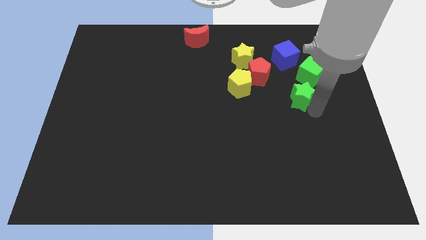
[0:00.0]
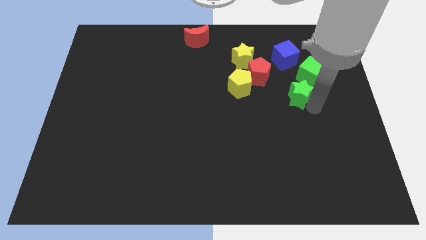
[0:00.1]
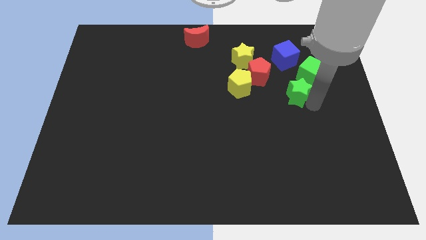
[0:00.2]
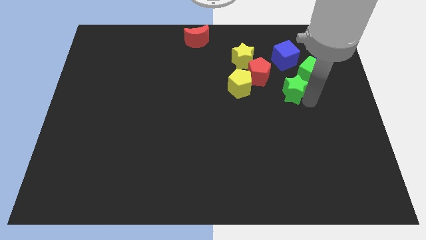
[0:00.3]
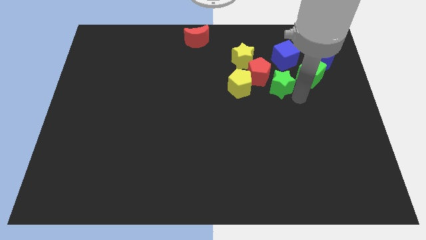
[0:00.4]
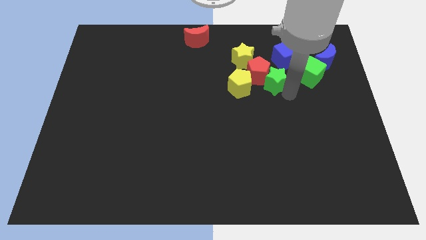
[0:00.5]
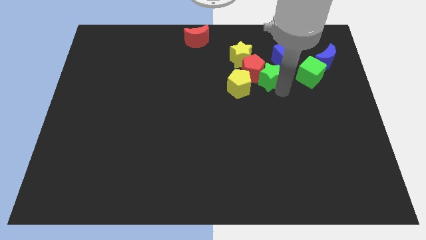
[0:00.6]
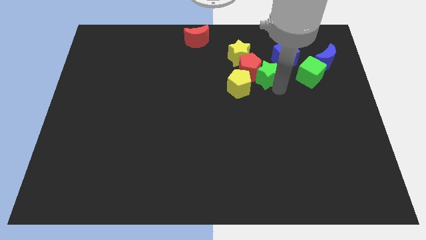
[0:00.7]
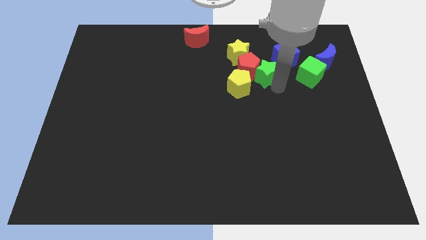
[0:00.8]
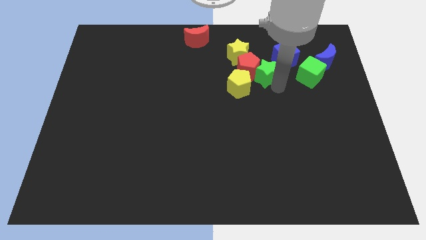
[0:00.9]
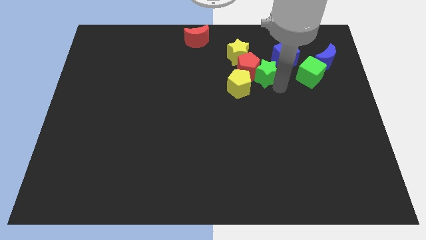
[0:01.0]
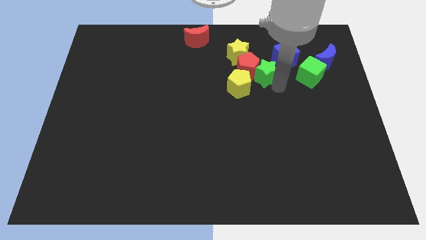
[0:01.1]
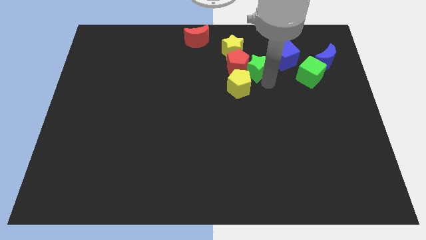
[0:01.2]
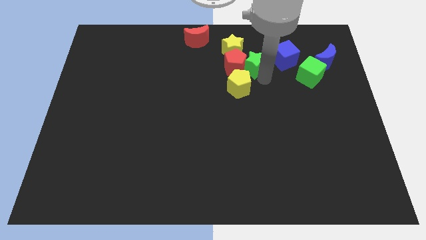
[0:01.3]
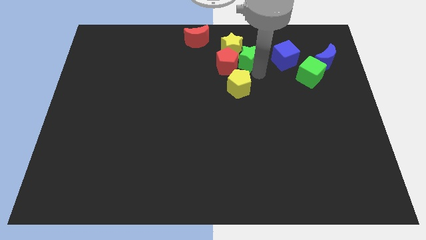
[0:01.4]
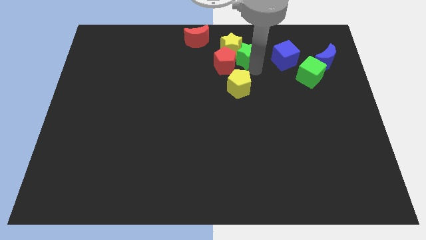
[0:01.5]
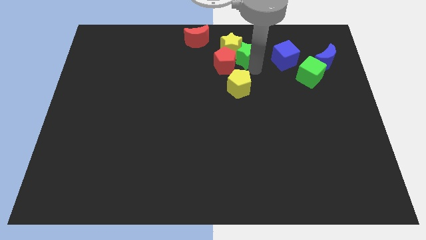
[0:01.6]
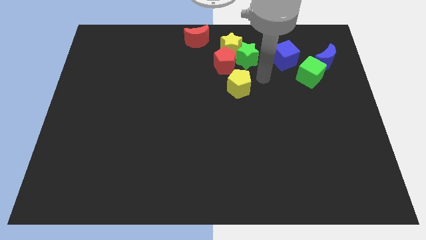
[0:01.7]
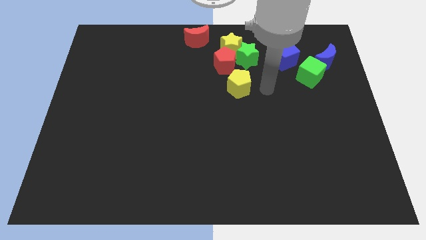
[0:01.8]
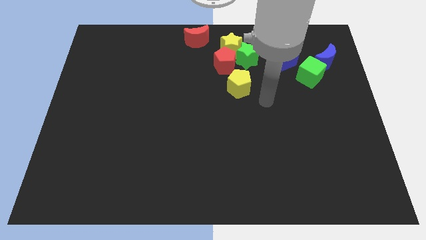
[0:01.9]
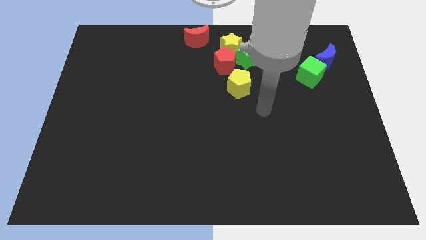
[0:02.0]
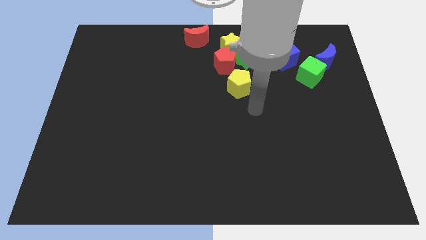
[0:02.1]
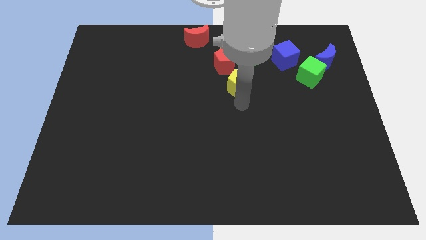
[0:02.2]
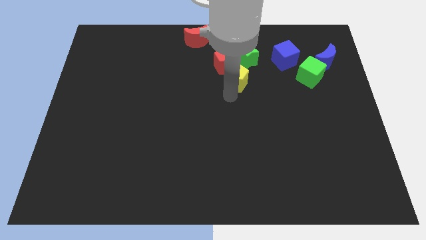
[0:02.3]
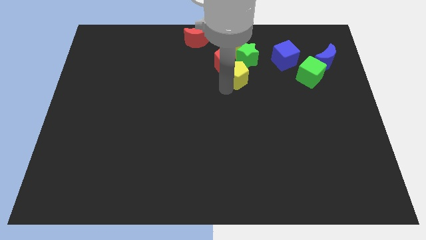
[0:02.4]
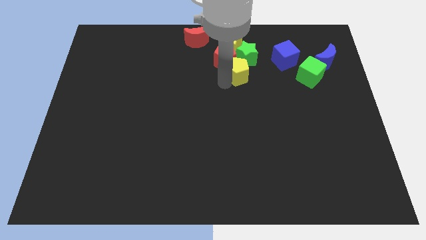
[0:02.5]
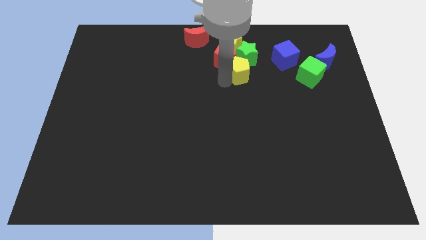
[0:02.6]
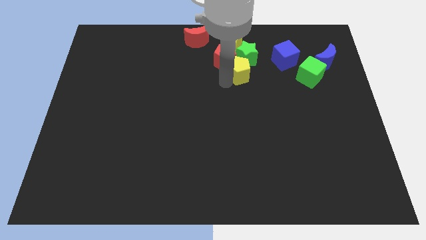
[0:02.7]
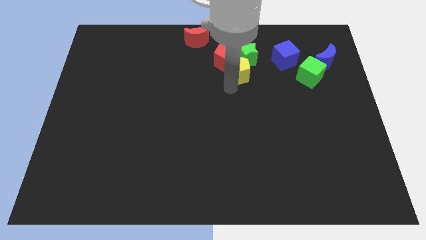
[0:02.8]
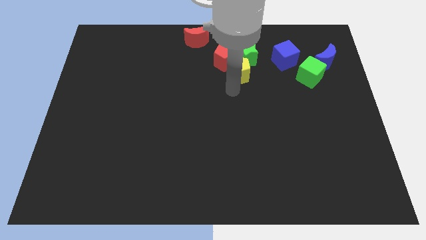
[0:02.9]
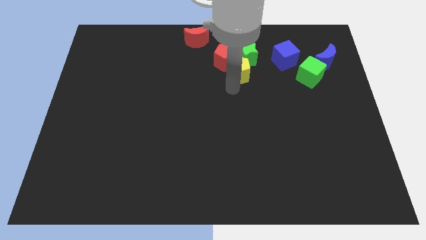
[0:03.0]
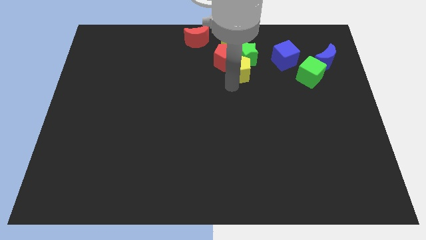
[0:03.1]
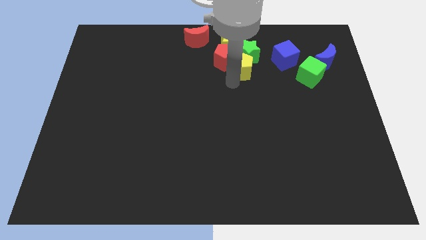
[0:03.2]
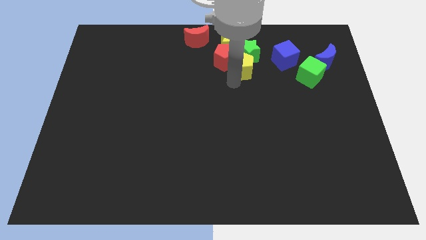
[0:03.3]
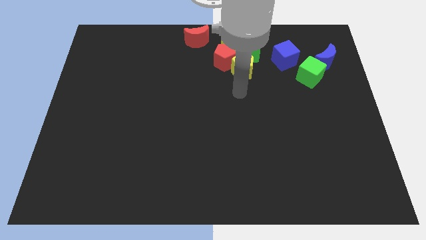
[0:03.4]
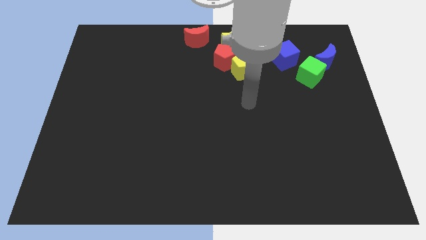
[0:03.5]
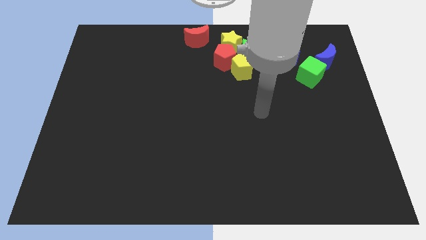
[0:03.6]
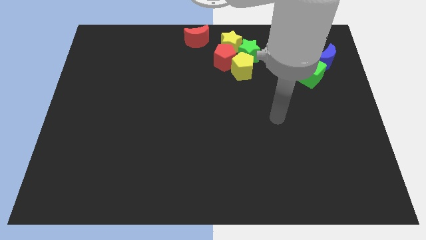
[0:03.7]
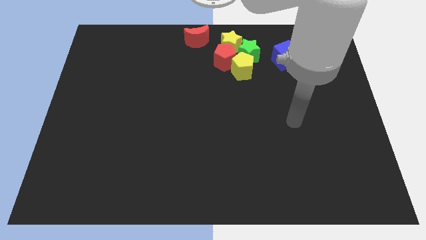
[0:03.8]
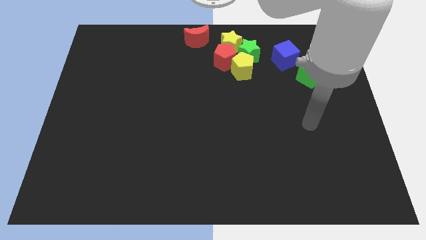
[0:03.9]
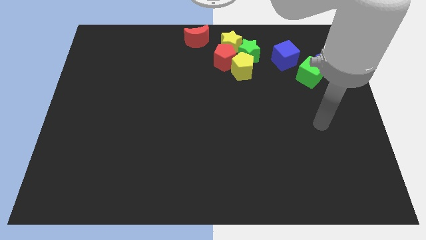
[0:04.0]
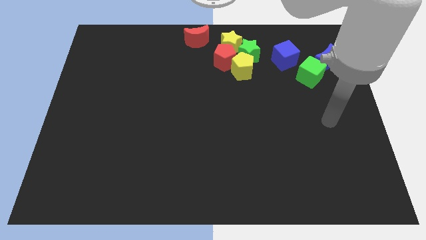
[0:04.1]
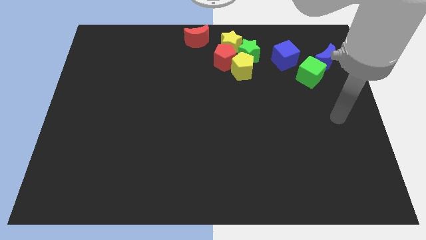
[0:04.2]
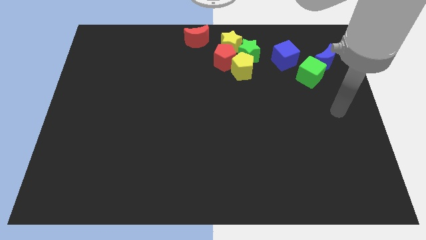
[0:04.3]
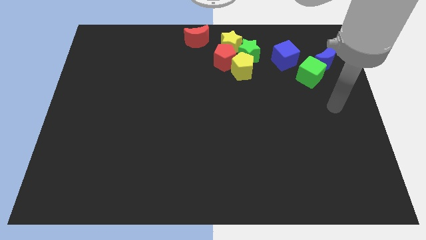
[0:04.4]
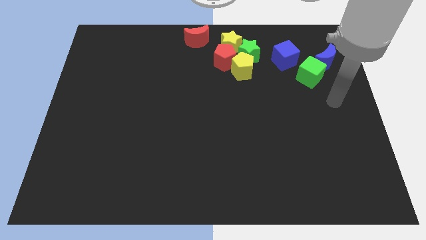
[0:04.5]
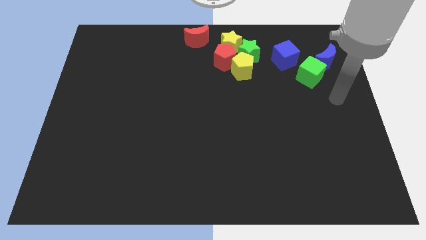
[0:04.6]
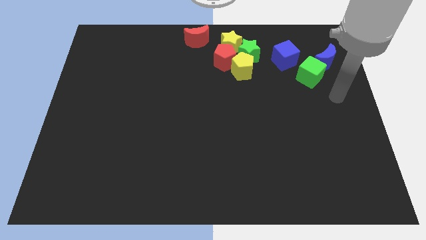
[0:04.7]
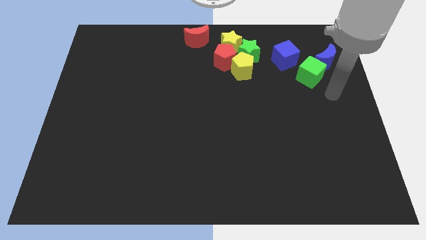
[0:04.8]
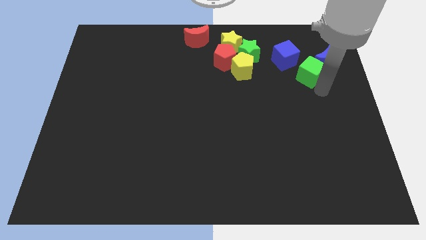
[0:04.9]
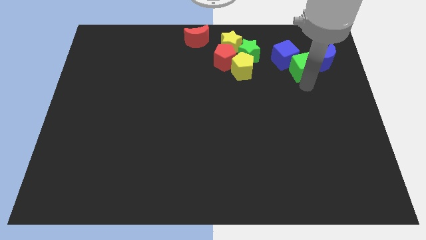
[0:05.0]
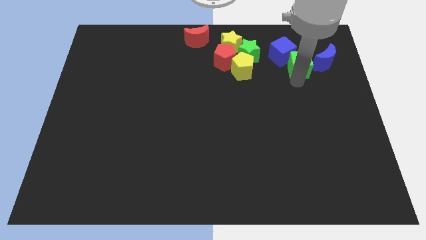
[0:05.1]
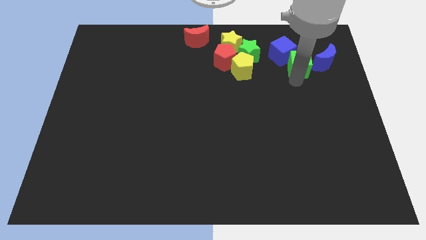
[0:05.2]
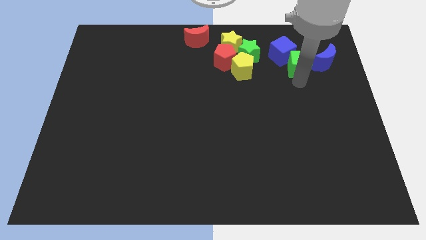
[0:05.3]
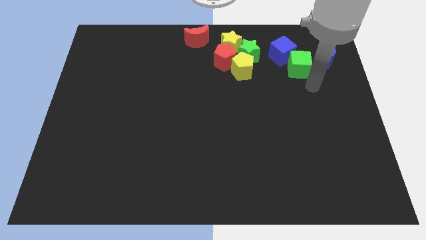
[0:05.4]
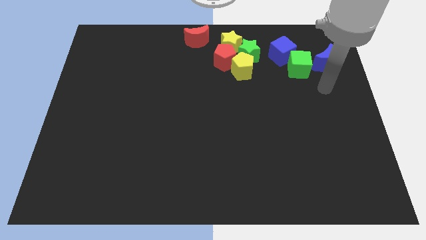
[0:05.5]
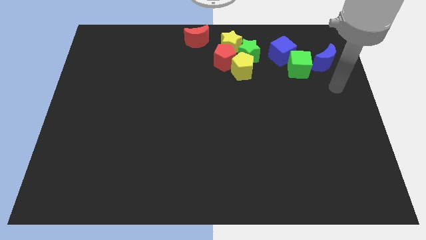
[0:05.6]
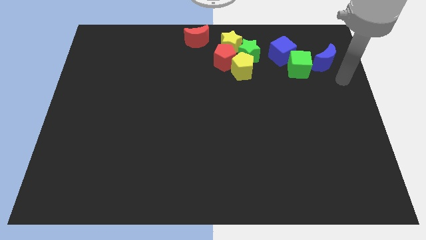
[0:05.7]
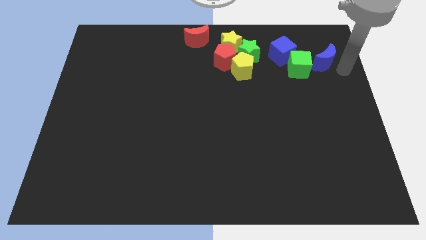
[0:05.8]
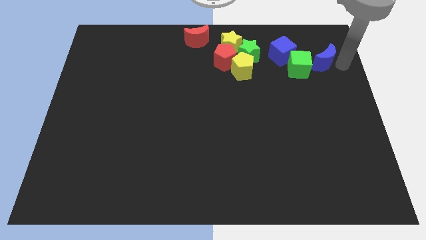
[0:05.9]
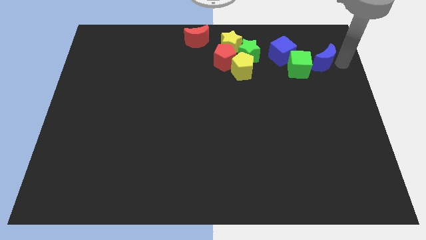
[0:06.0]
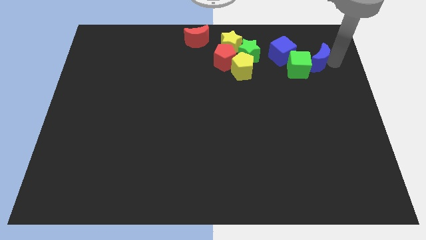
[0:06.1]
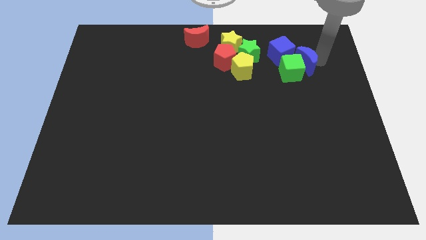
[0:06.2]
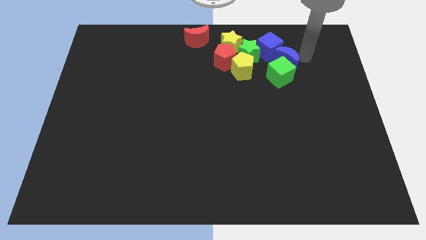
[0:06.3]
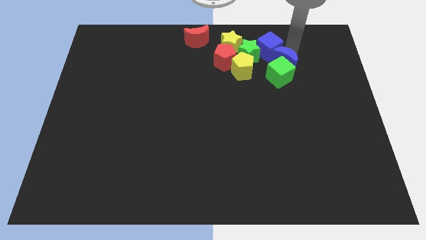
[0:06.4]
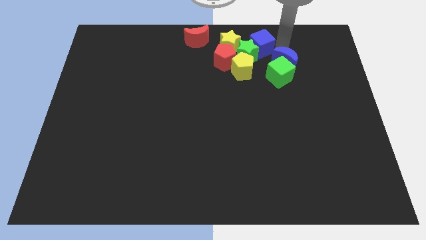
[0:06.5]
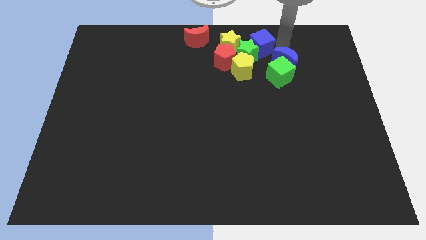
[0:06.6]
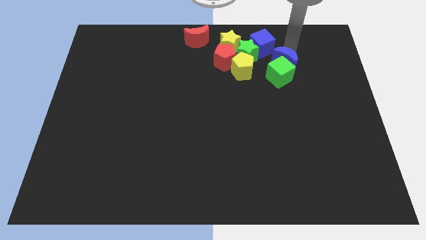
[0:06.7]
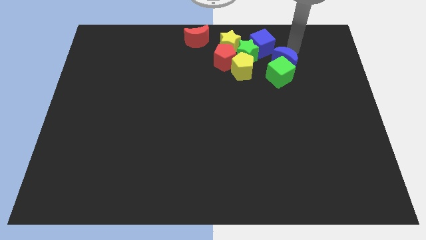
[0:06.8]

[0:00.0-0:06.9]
place the green star to the right side of the red pentagon

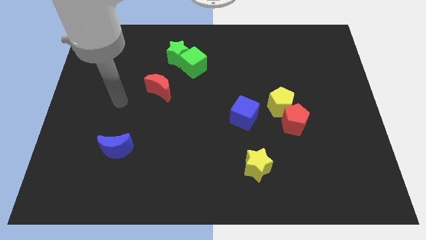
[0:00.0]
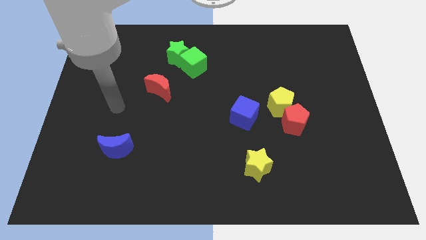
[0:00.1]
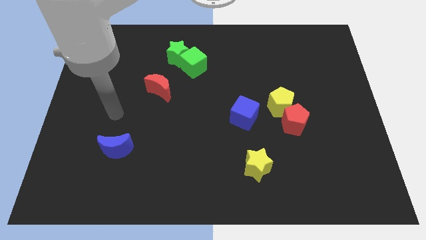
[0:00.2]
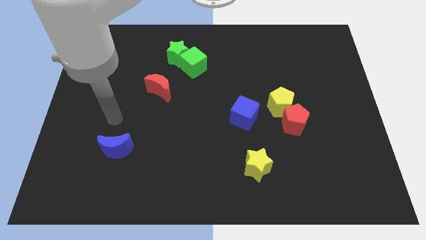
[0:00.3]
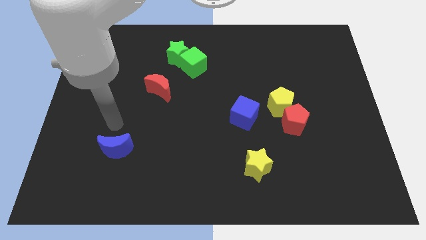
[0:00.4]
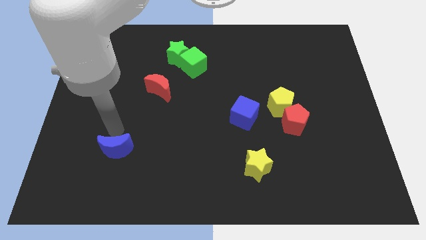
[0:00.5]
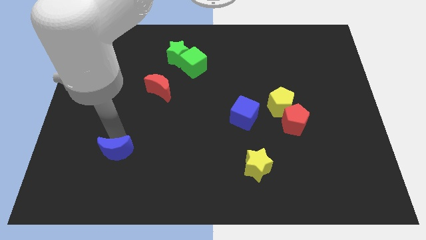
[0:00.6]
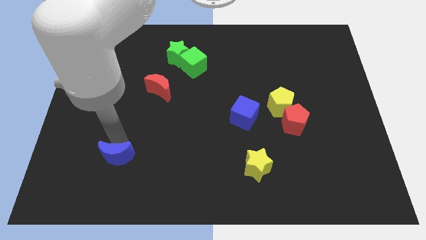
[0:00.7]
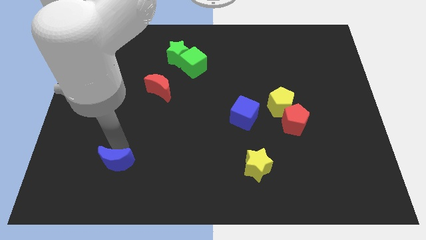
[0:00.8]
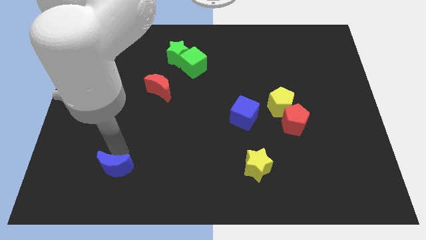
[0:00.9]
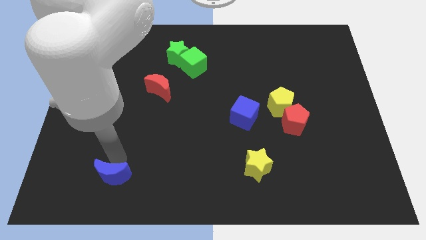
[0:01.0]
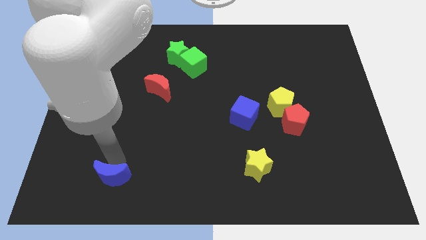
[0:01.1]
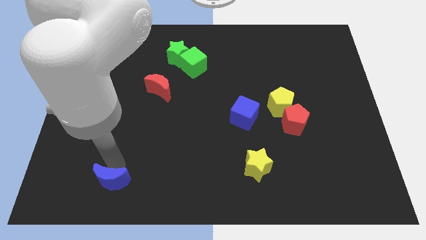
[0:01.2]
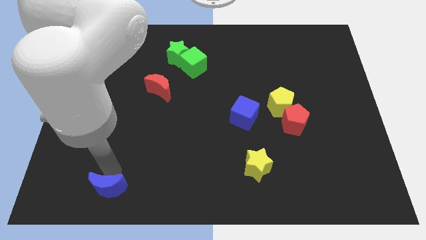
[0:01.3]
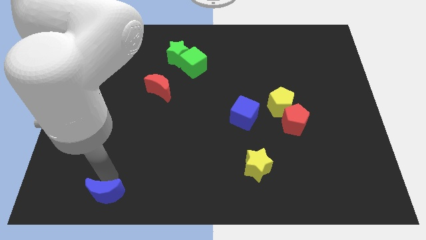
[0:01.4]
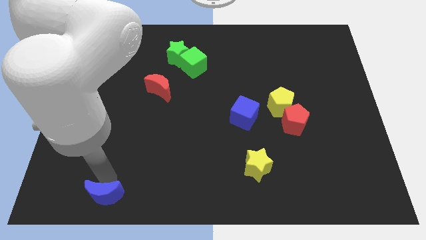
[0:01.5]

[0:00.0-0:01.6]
push the blue moon to the bottom side of the board

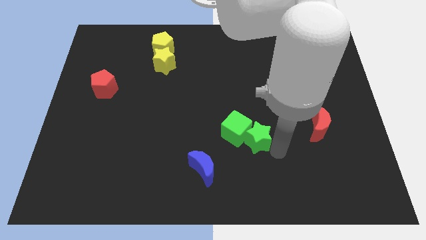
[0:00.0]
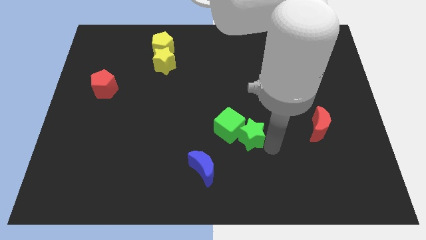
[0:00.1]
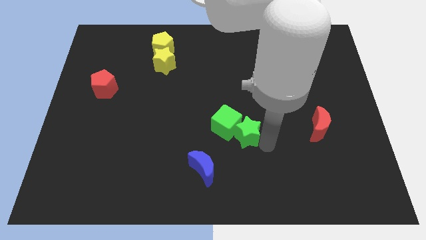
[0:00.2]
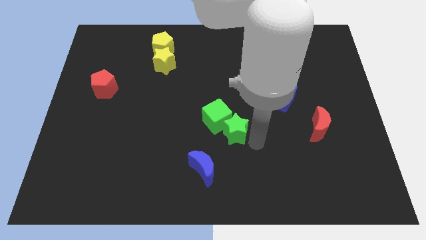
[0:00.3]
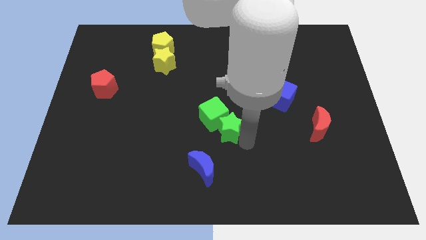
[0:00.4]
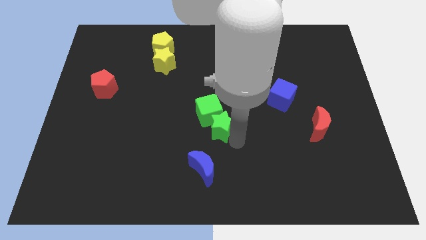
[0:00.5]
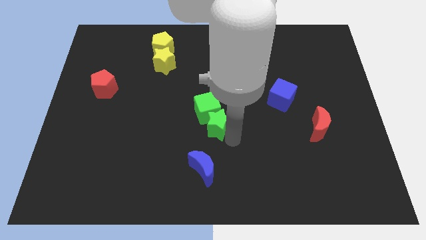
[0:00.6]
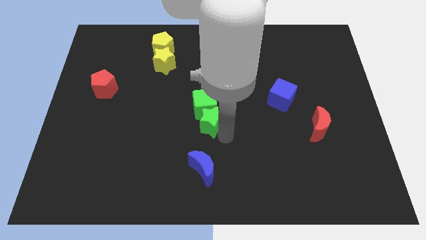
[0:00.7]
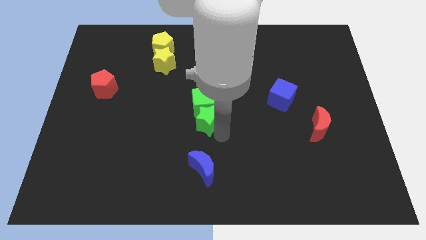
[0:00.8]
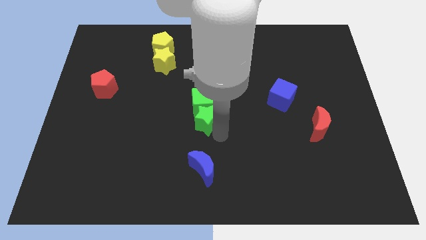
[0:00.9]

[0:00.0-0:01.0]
place the green blocks vertically to the top of the blue crescent
